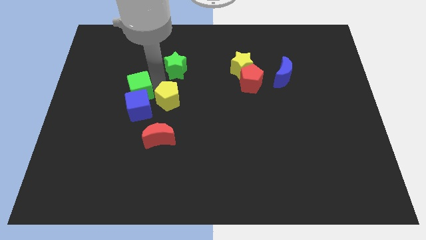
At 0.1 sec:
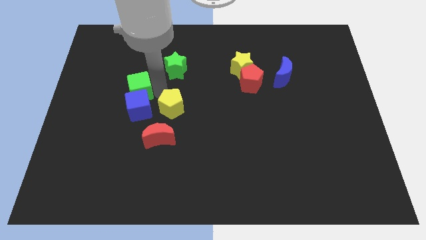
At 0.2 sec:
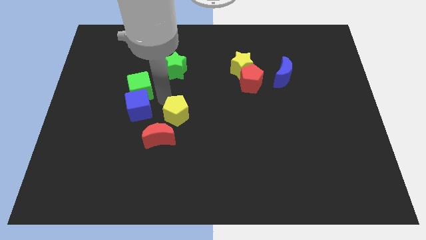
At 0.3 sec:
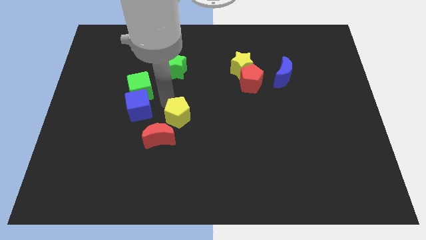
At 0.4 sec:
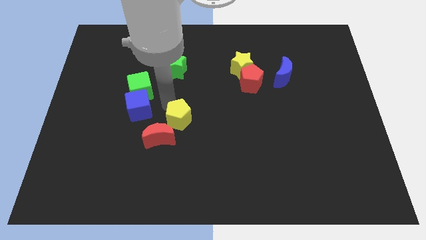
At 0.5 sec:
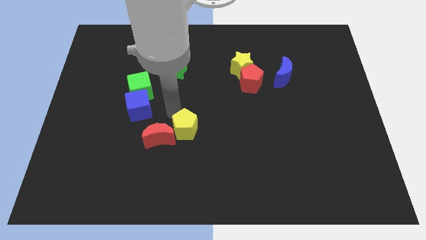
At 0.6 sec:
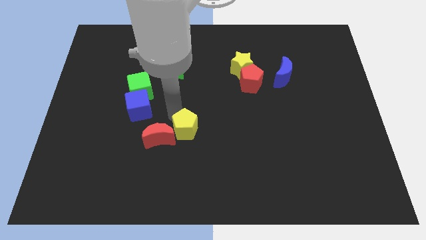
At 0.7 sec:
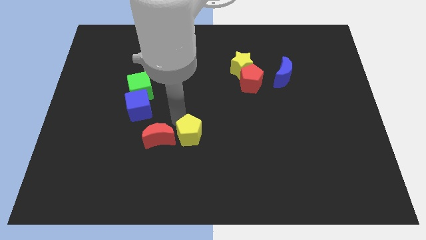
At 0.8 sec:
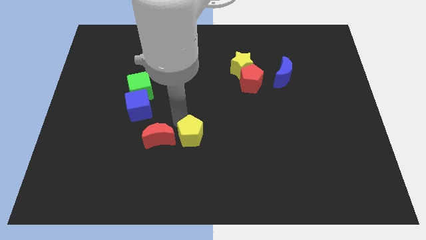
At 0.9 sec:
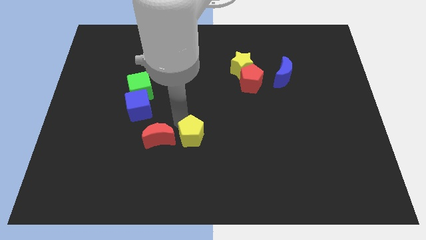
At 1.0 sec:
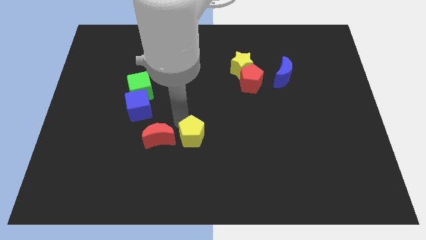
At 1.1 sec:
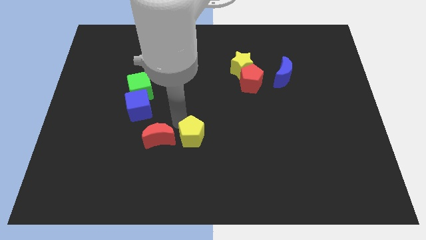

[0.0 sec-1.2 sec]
place the yellow pentagon to the right of the red moon

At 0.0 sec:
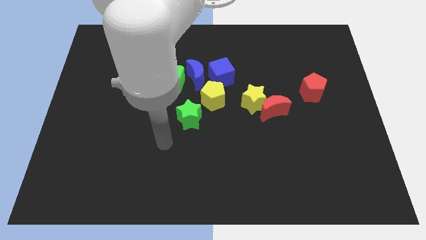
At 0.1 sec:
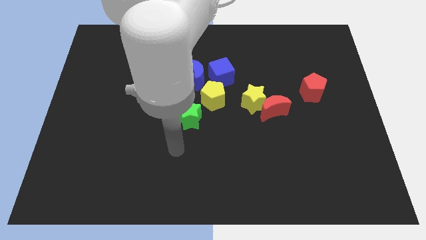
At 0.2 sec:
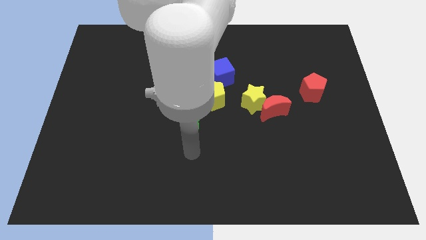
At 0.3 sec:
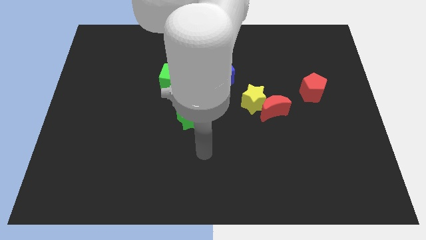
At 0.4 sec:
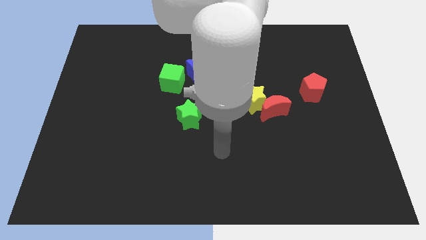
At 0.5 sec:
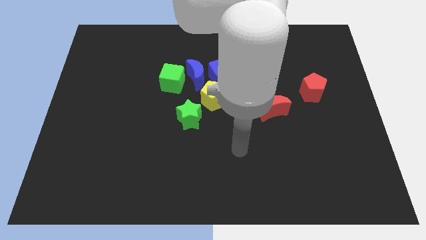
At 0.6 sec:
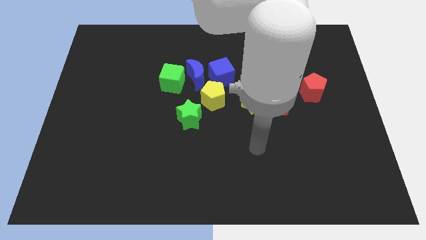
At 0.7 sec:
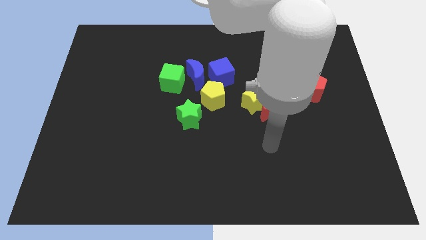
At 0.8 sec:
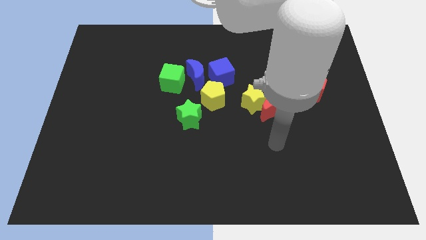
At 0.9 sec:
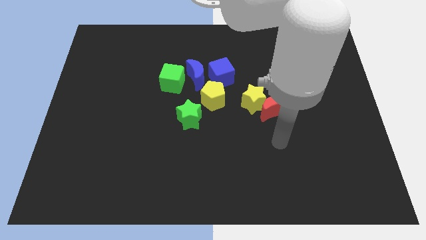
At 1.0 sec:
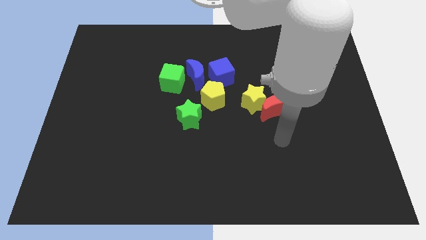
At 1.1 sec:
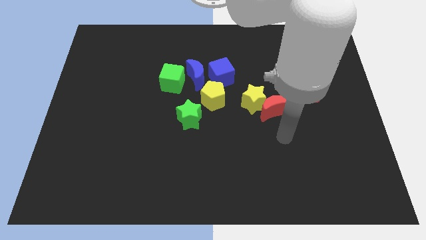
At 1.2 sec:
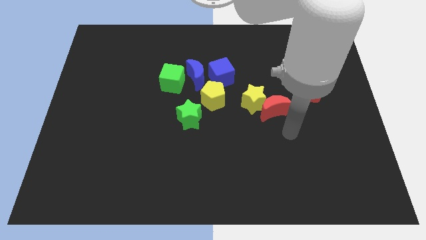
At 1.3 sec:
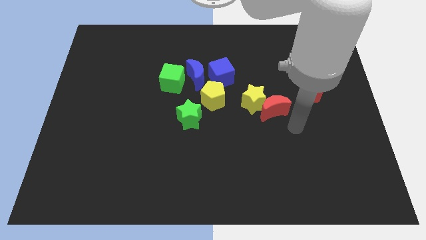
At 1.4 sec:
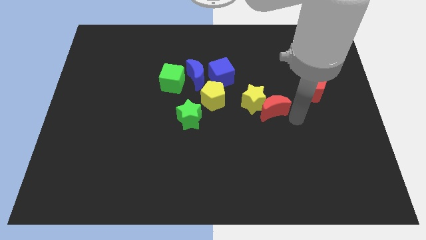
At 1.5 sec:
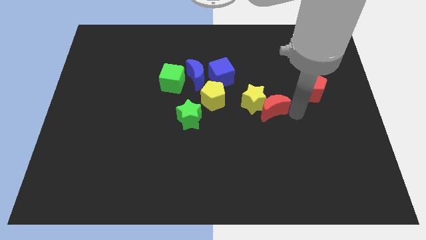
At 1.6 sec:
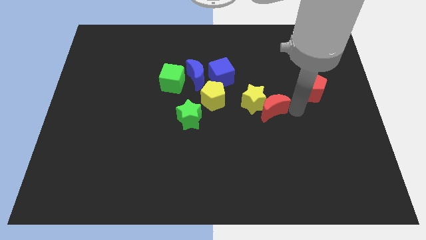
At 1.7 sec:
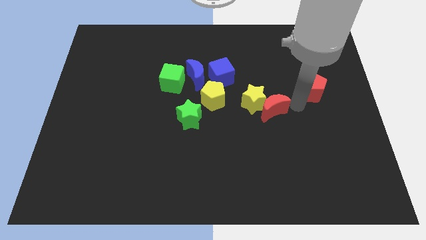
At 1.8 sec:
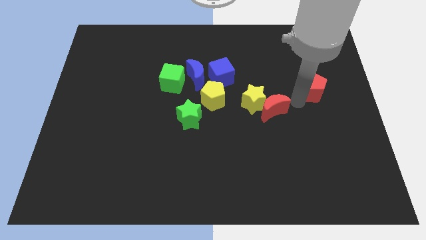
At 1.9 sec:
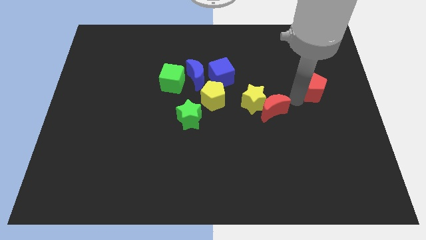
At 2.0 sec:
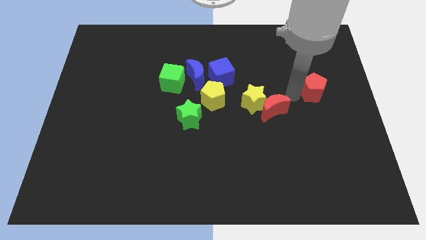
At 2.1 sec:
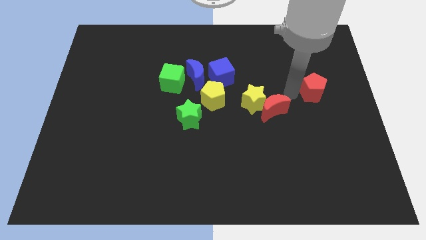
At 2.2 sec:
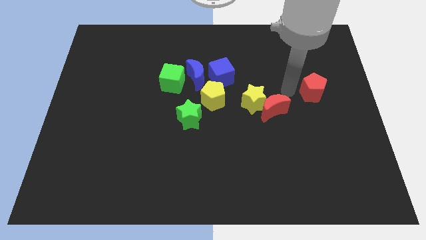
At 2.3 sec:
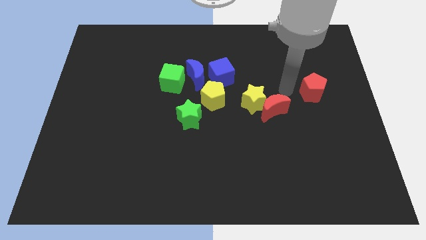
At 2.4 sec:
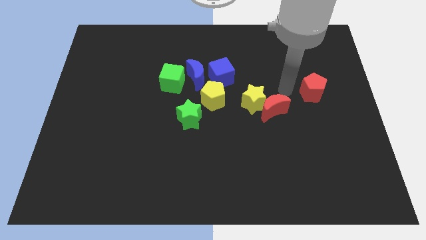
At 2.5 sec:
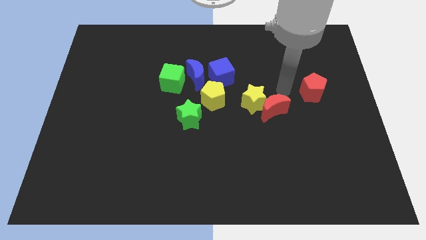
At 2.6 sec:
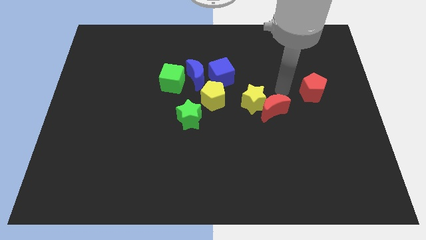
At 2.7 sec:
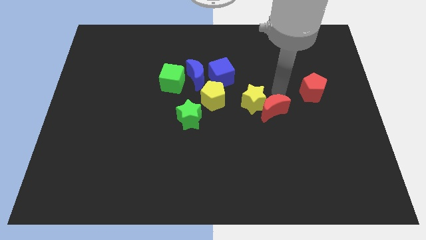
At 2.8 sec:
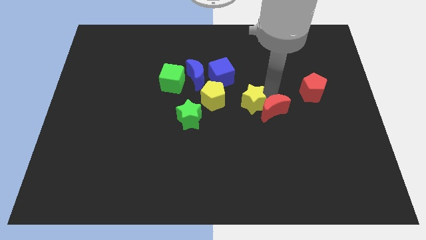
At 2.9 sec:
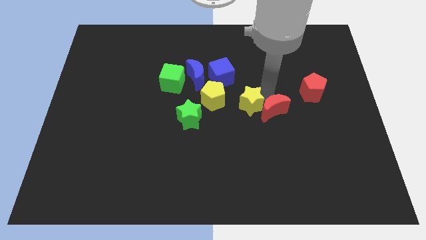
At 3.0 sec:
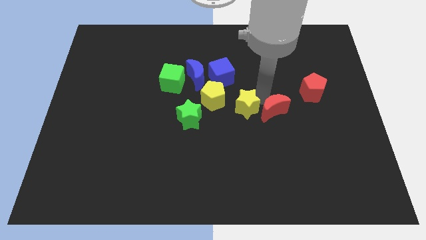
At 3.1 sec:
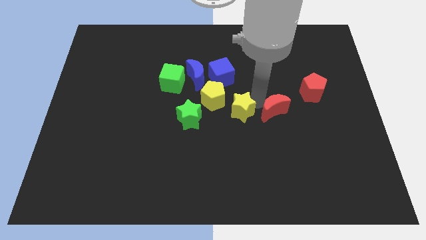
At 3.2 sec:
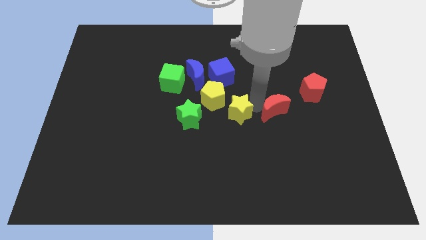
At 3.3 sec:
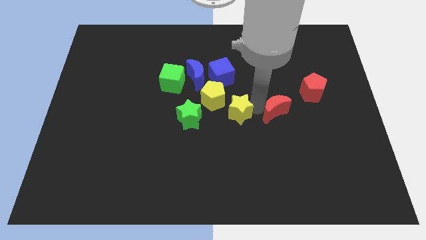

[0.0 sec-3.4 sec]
separate the yellow star from the red crescent

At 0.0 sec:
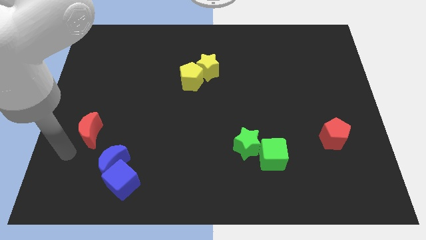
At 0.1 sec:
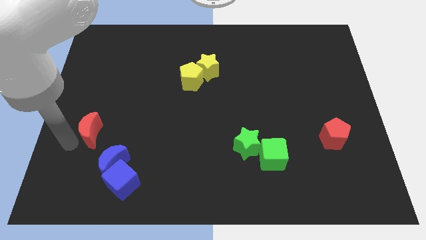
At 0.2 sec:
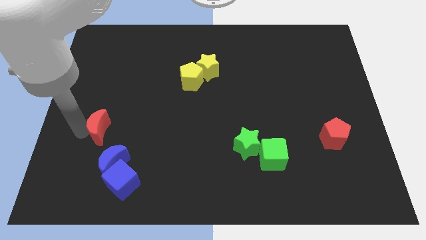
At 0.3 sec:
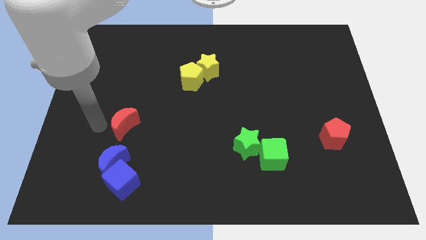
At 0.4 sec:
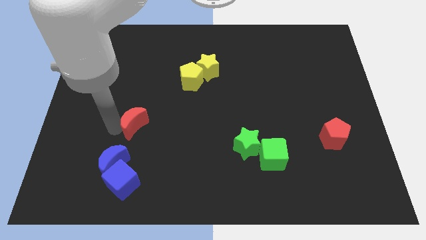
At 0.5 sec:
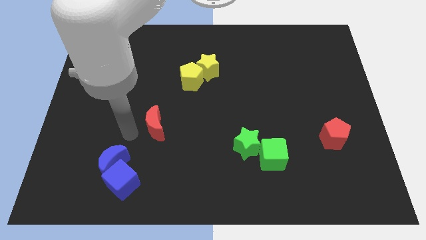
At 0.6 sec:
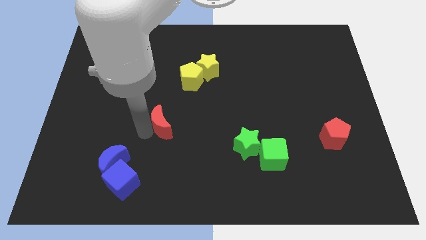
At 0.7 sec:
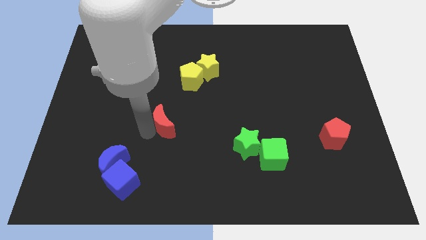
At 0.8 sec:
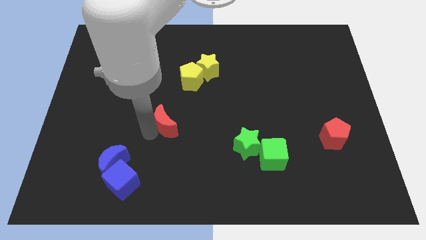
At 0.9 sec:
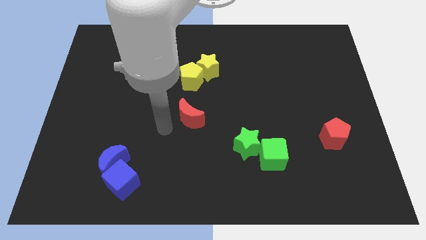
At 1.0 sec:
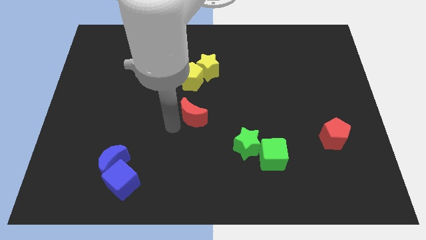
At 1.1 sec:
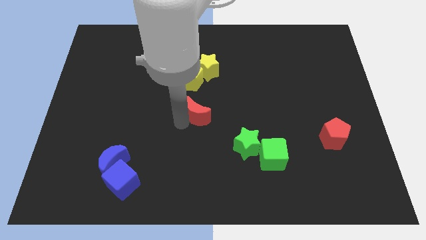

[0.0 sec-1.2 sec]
push the red moon towards the center

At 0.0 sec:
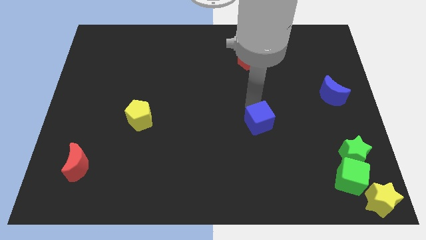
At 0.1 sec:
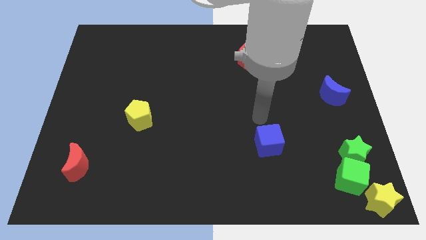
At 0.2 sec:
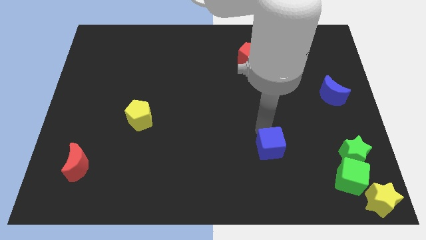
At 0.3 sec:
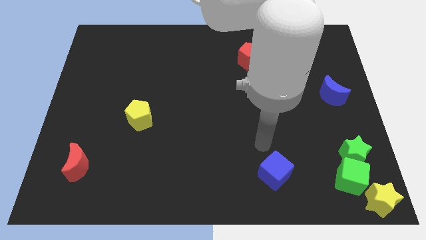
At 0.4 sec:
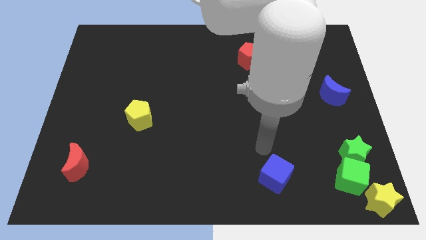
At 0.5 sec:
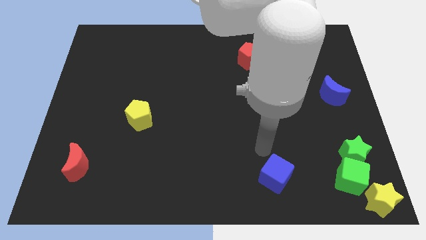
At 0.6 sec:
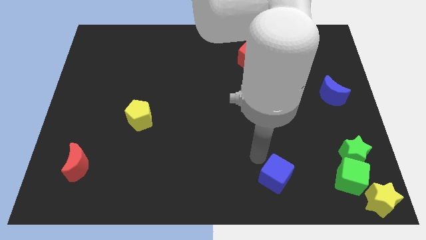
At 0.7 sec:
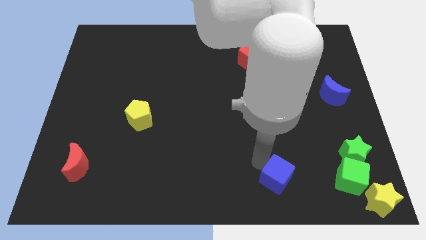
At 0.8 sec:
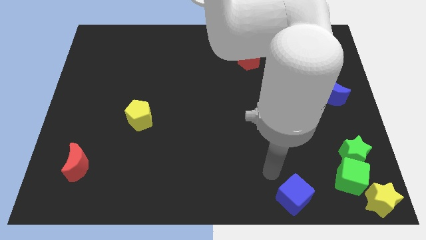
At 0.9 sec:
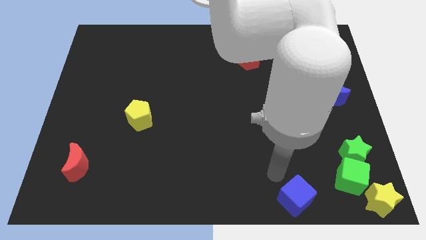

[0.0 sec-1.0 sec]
move the blue block to the bottom center of the board

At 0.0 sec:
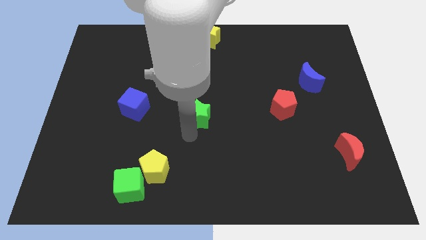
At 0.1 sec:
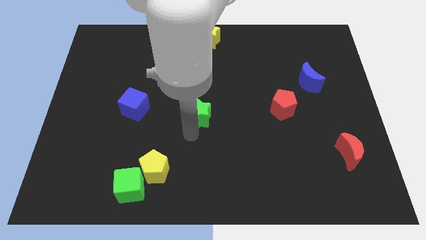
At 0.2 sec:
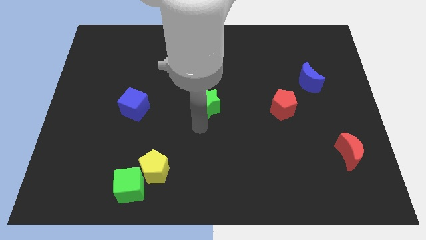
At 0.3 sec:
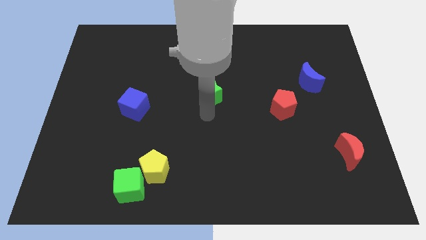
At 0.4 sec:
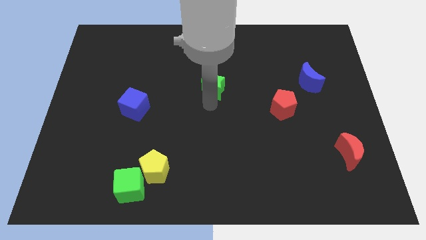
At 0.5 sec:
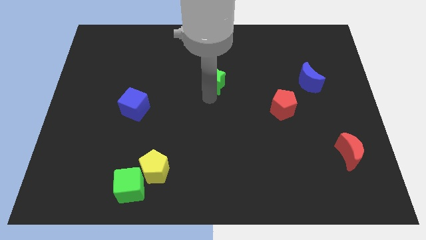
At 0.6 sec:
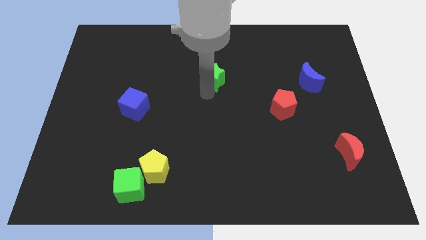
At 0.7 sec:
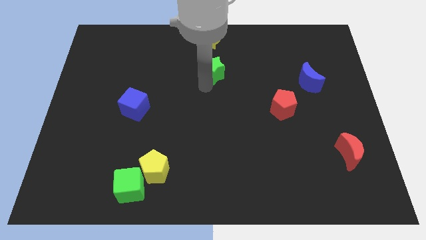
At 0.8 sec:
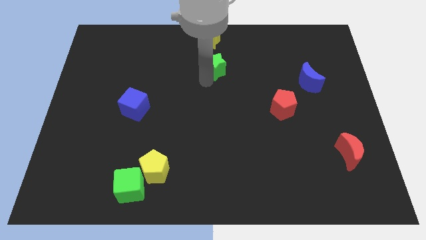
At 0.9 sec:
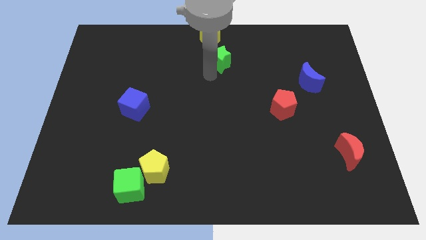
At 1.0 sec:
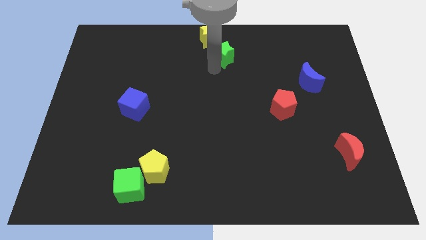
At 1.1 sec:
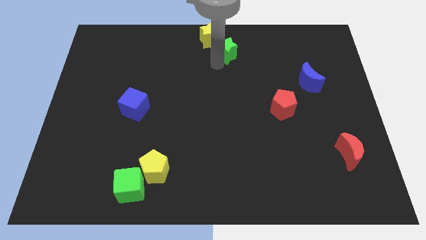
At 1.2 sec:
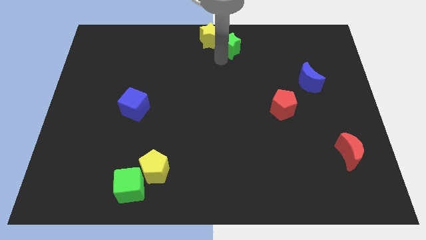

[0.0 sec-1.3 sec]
slide the green star diagonally top right to the blue cube

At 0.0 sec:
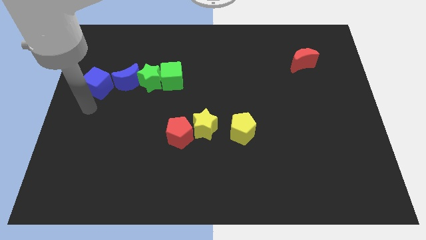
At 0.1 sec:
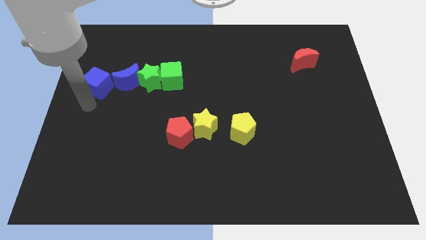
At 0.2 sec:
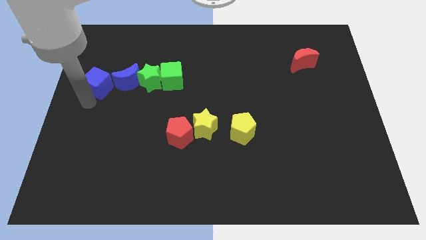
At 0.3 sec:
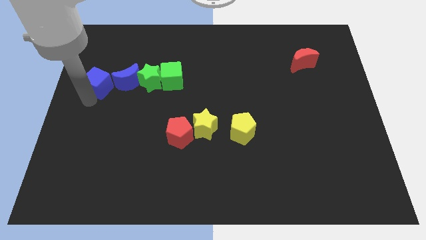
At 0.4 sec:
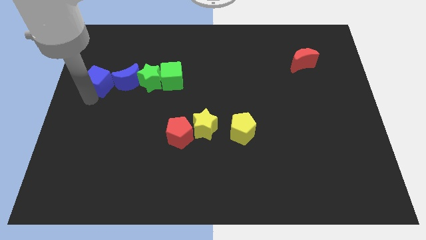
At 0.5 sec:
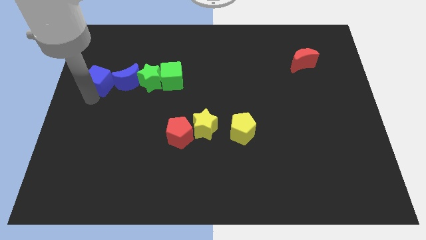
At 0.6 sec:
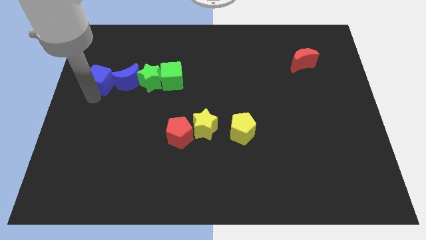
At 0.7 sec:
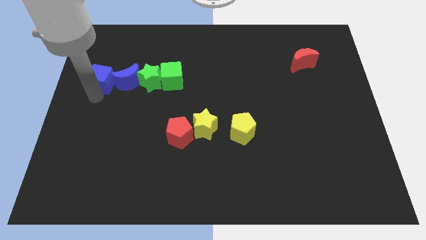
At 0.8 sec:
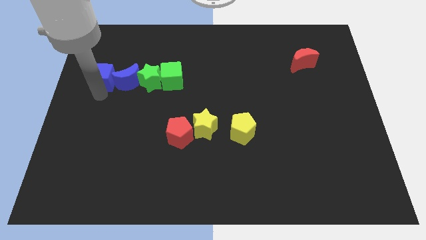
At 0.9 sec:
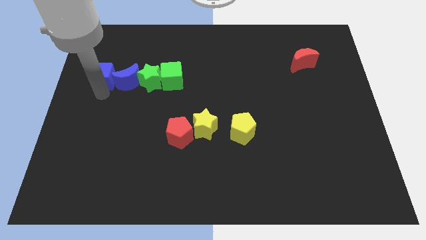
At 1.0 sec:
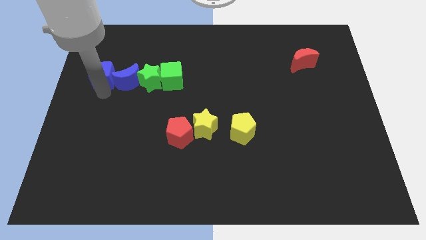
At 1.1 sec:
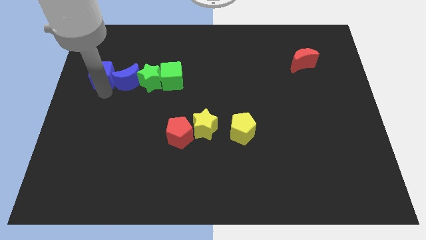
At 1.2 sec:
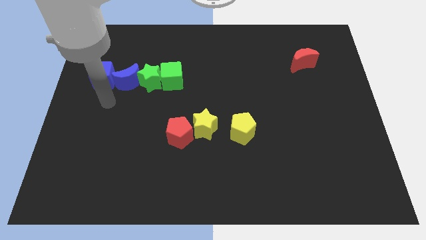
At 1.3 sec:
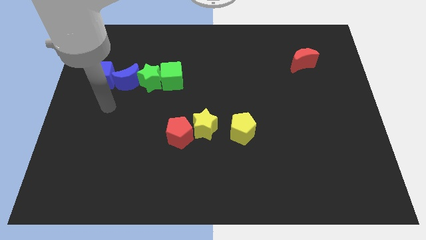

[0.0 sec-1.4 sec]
adjust the blue cube to the left of the blue crescent
